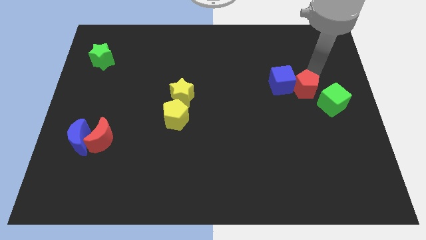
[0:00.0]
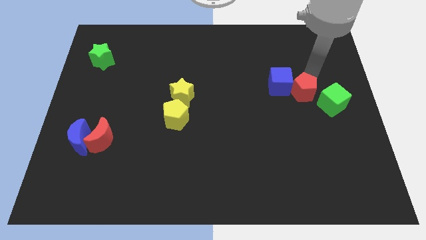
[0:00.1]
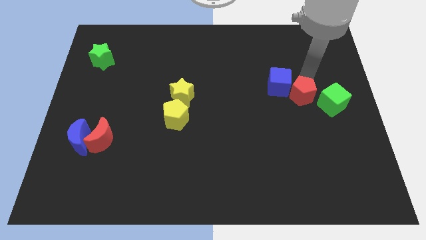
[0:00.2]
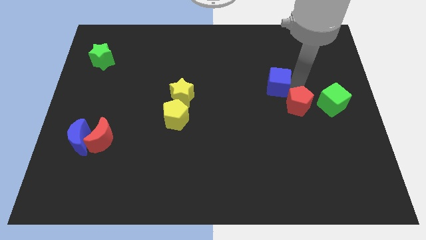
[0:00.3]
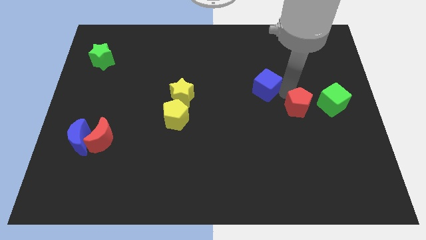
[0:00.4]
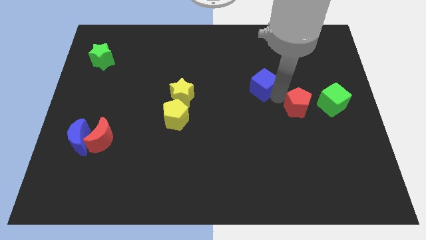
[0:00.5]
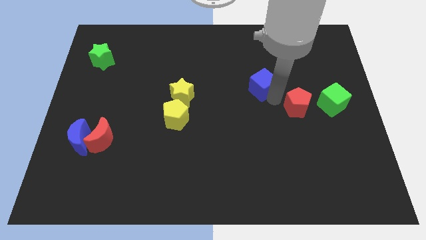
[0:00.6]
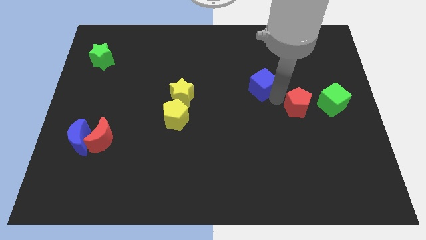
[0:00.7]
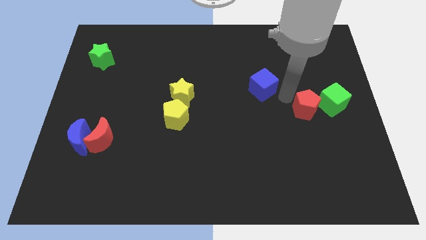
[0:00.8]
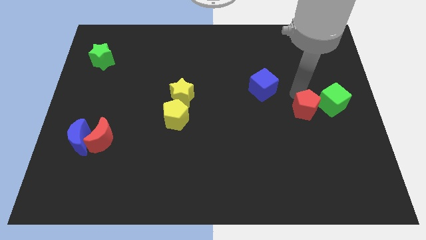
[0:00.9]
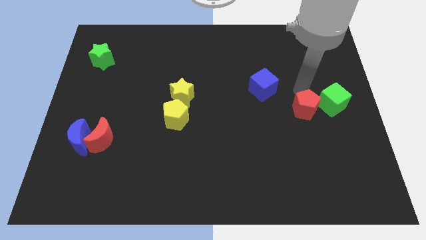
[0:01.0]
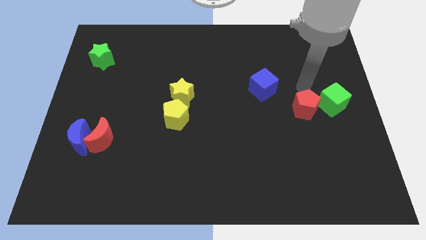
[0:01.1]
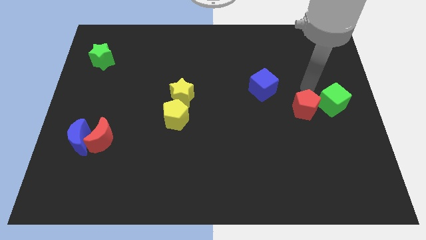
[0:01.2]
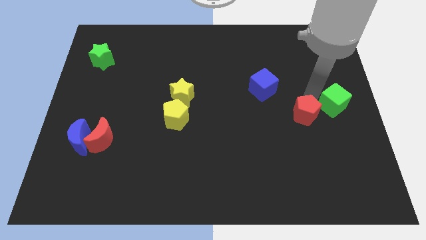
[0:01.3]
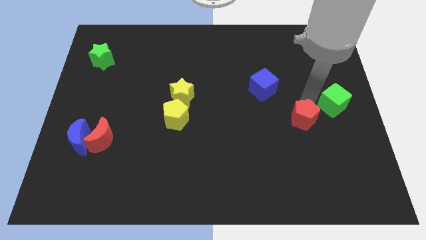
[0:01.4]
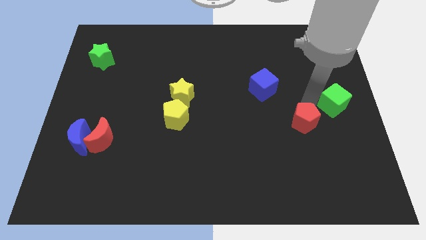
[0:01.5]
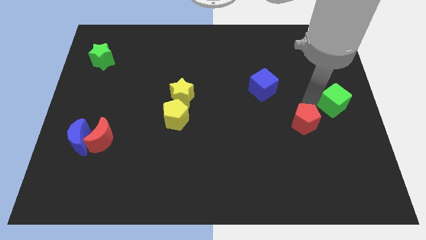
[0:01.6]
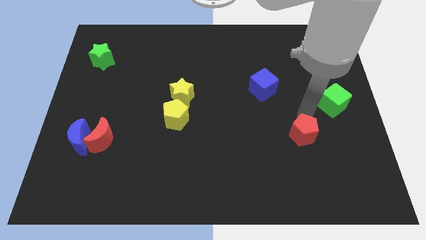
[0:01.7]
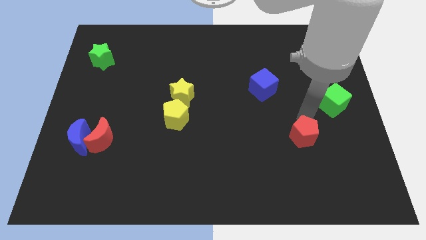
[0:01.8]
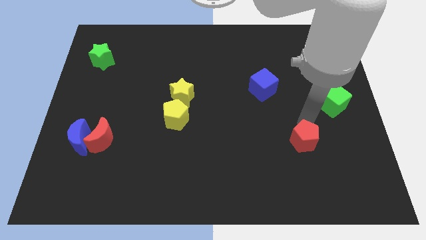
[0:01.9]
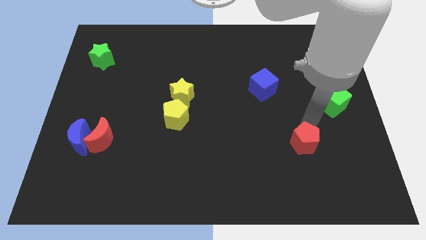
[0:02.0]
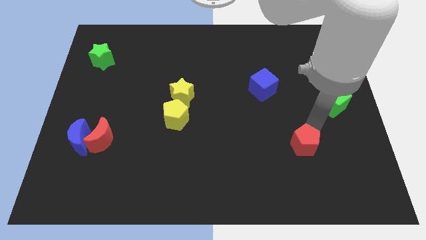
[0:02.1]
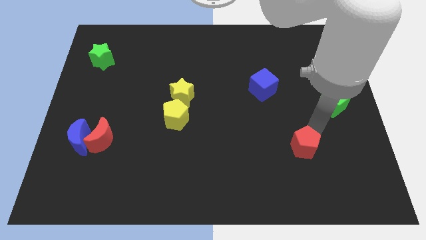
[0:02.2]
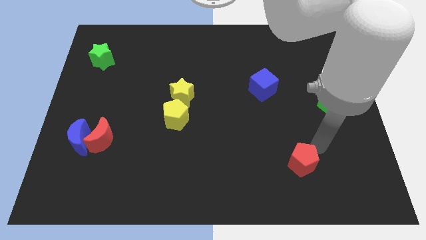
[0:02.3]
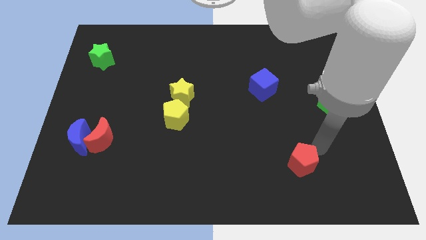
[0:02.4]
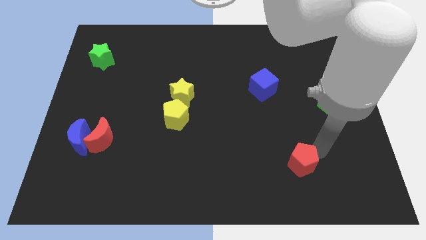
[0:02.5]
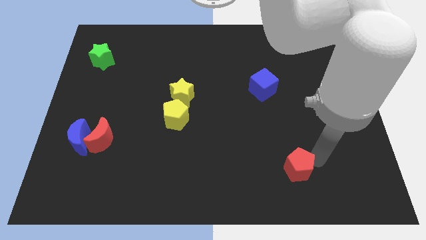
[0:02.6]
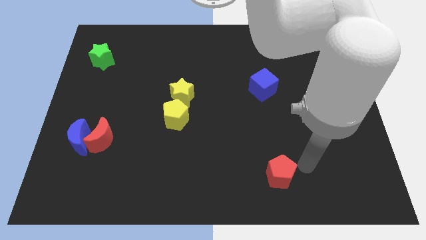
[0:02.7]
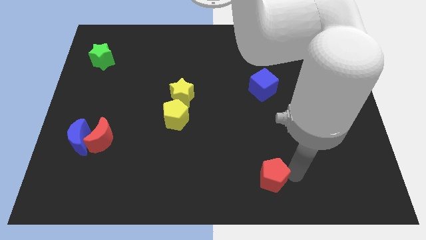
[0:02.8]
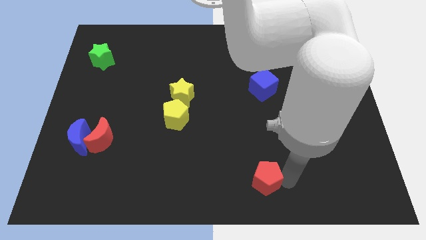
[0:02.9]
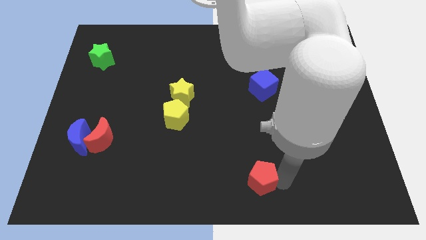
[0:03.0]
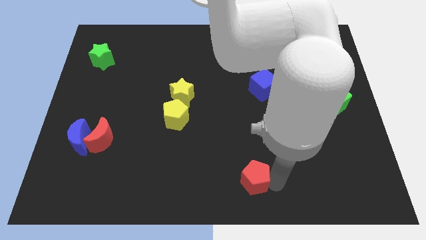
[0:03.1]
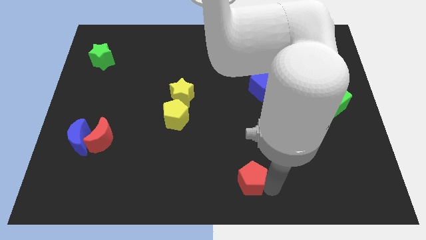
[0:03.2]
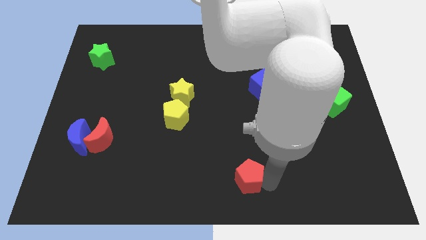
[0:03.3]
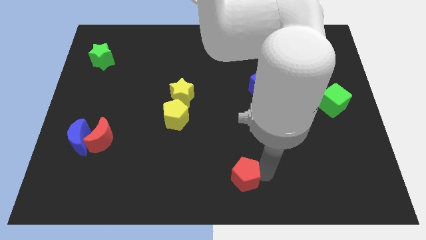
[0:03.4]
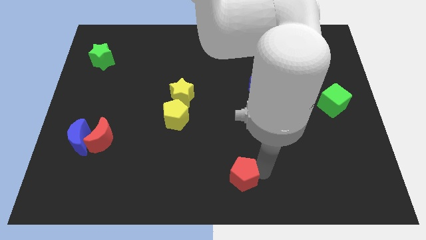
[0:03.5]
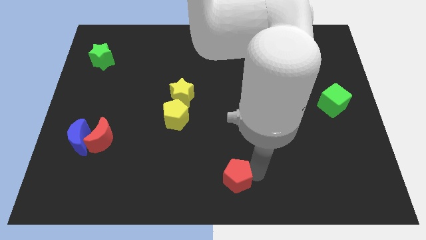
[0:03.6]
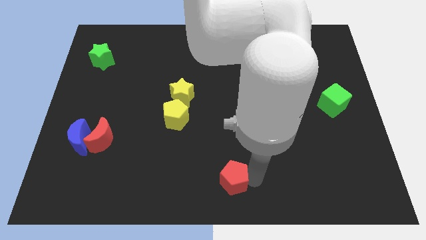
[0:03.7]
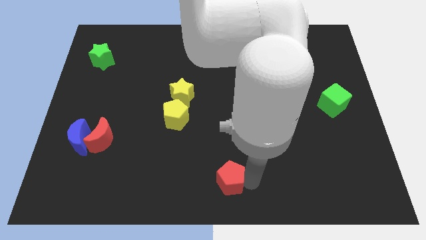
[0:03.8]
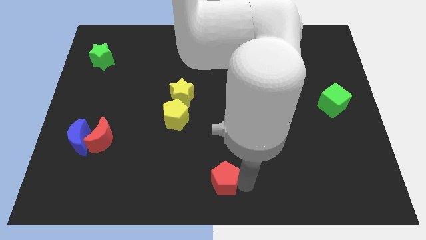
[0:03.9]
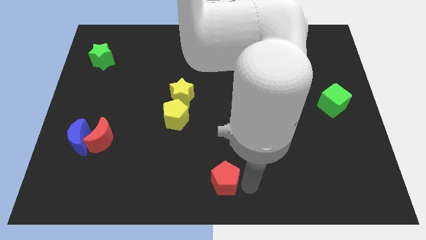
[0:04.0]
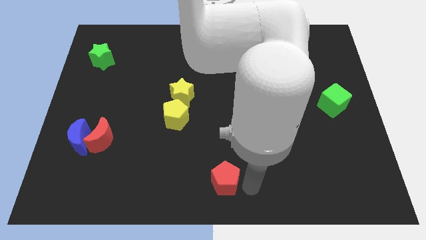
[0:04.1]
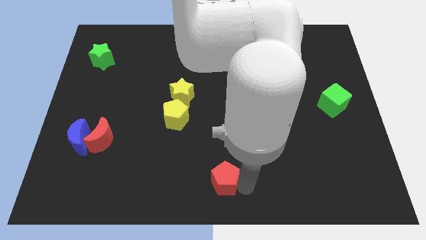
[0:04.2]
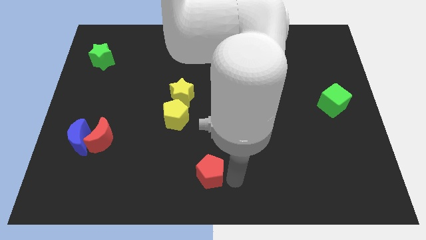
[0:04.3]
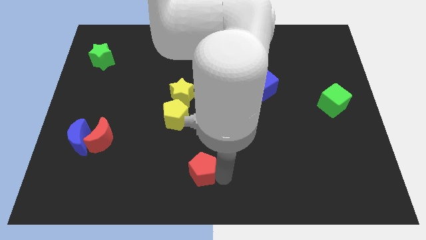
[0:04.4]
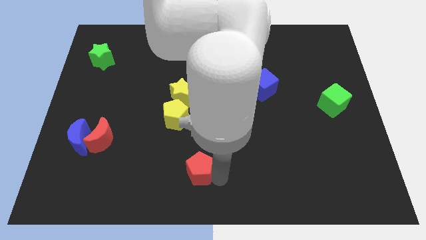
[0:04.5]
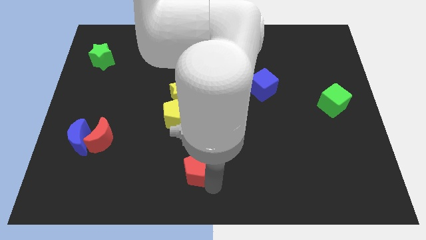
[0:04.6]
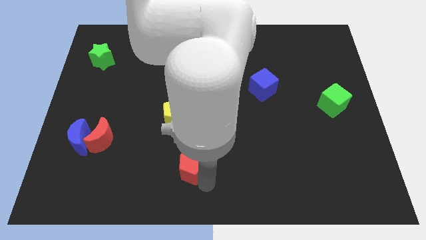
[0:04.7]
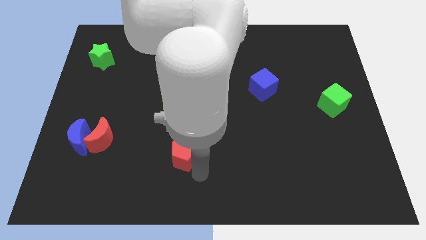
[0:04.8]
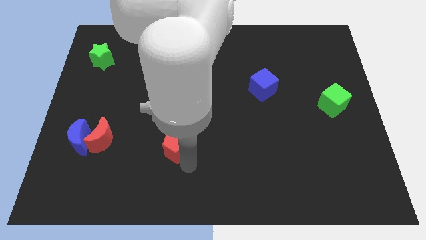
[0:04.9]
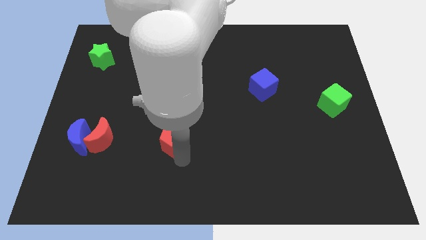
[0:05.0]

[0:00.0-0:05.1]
place the red pentagon vertically below the yellow blocks

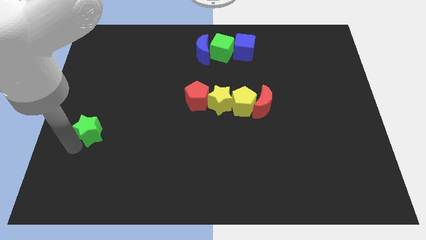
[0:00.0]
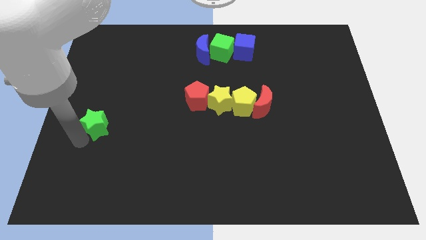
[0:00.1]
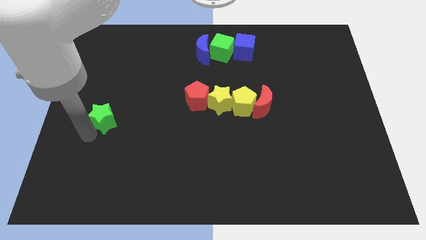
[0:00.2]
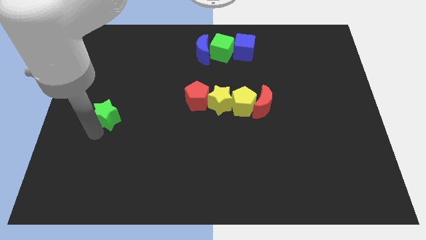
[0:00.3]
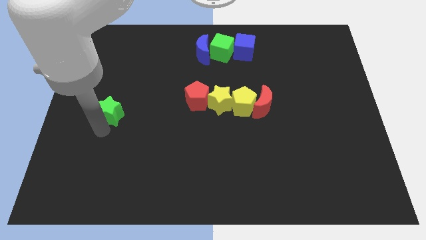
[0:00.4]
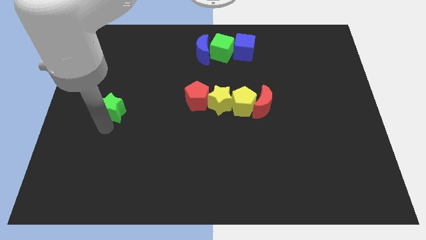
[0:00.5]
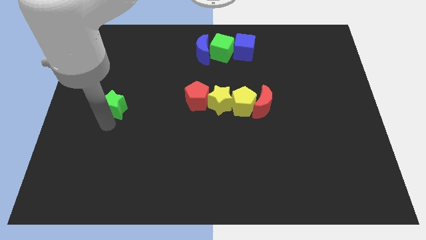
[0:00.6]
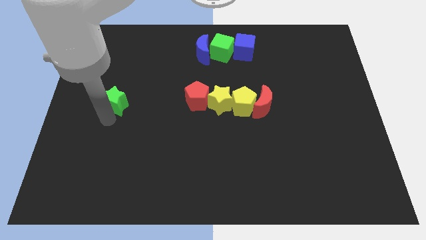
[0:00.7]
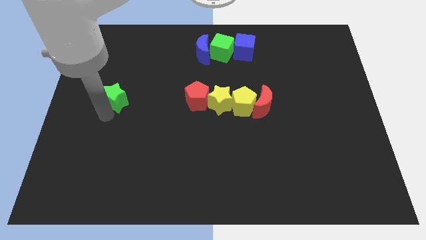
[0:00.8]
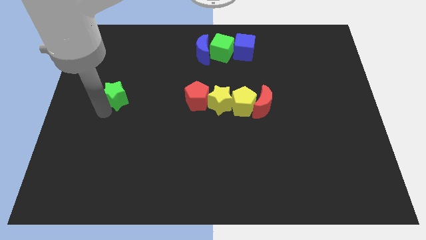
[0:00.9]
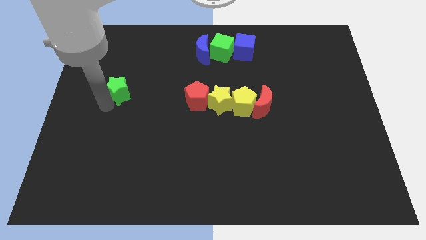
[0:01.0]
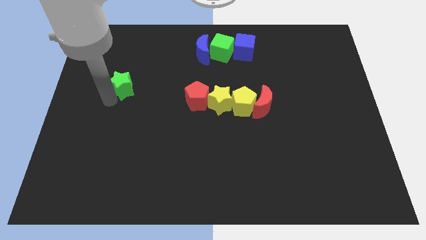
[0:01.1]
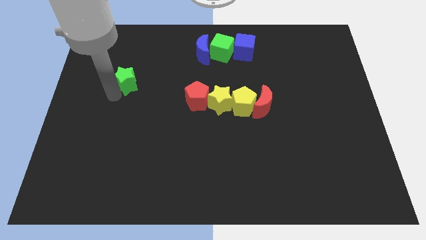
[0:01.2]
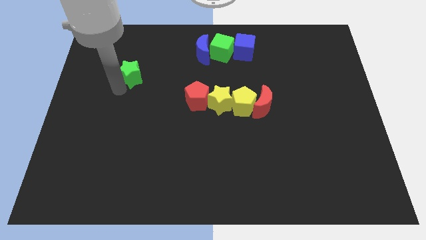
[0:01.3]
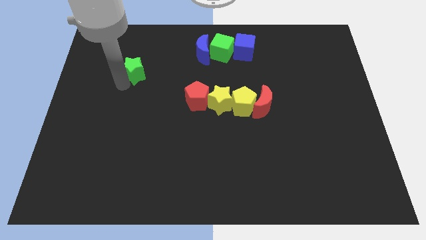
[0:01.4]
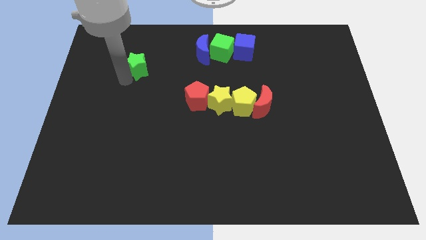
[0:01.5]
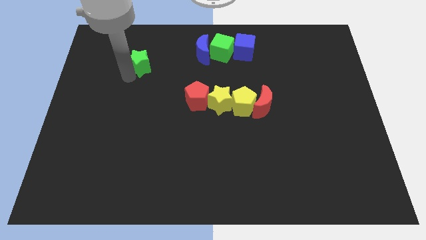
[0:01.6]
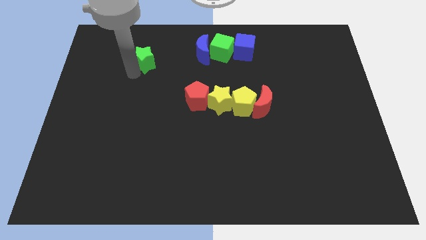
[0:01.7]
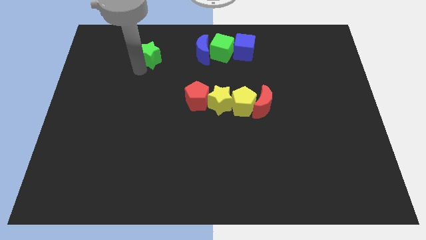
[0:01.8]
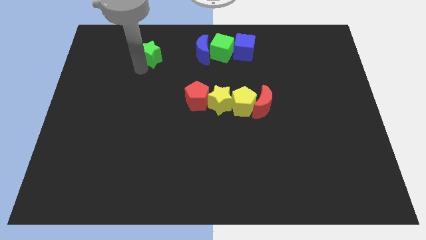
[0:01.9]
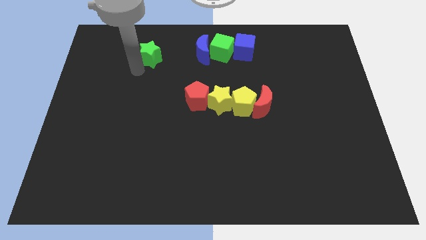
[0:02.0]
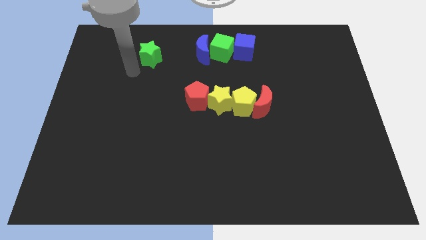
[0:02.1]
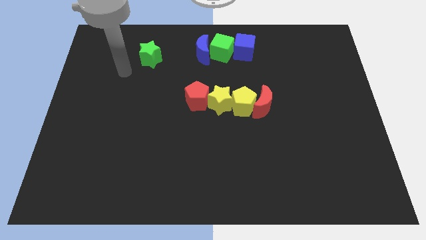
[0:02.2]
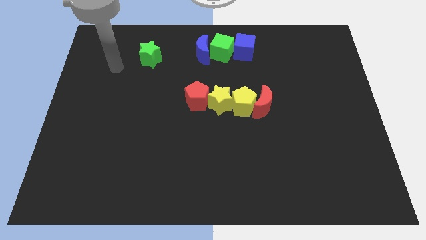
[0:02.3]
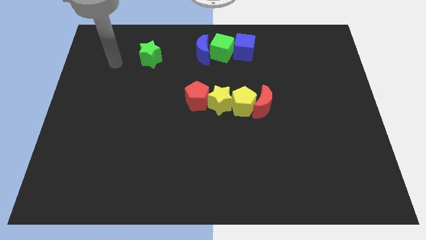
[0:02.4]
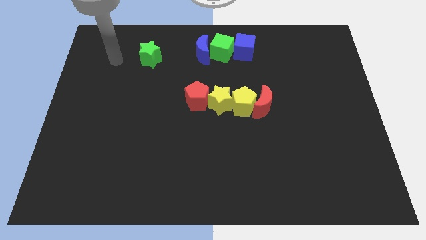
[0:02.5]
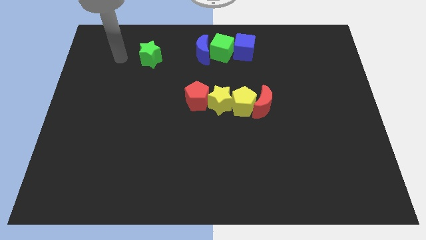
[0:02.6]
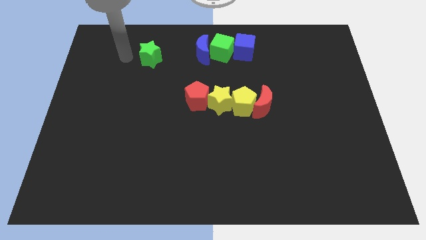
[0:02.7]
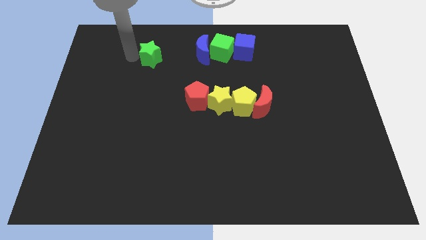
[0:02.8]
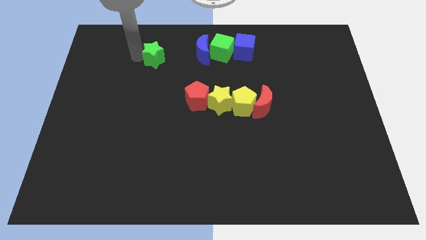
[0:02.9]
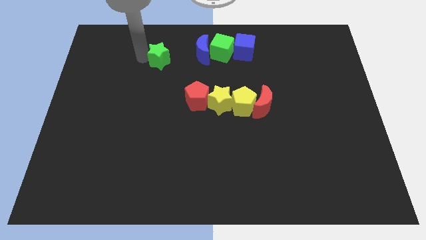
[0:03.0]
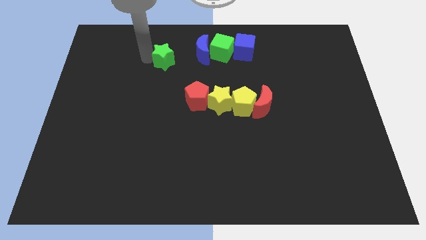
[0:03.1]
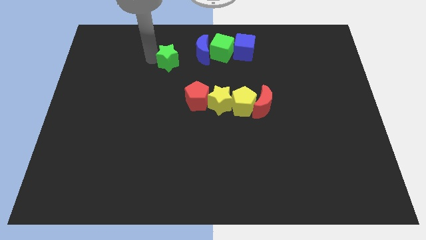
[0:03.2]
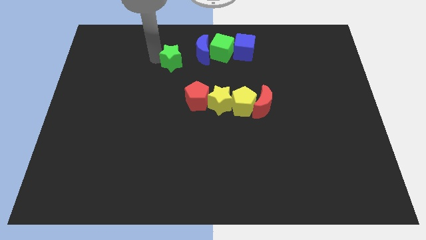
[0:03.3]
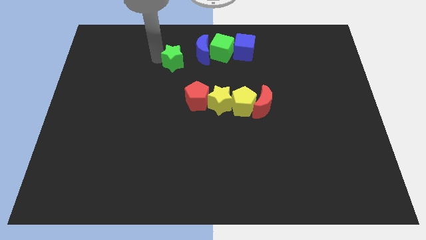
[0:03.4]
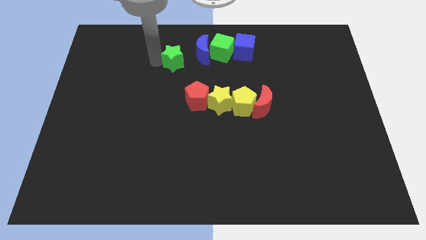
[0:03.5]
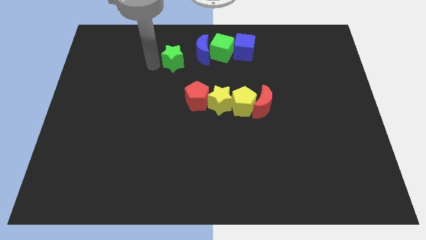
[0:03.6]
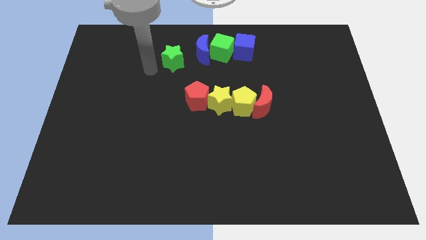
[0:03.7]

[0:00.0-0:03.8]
move green star towards the blue crescent
